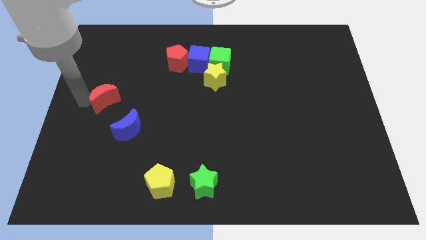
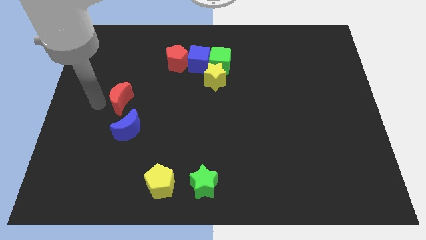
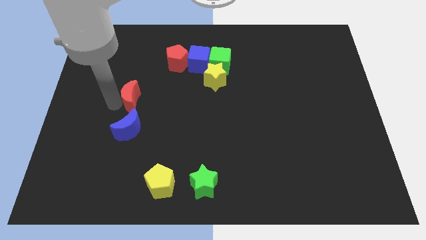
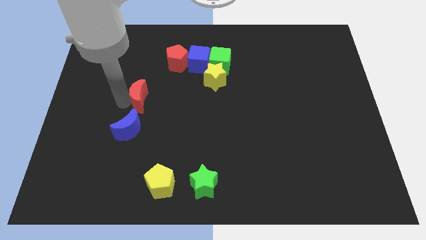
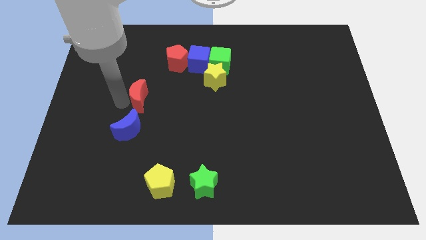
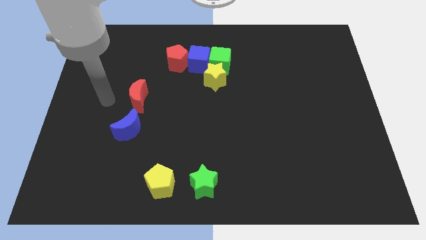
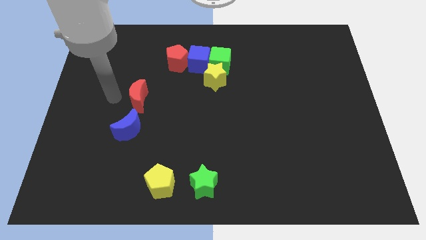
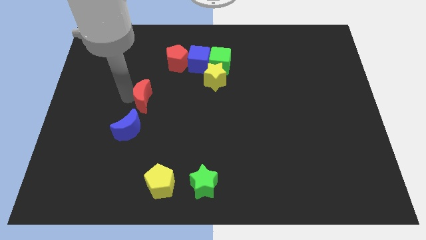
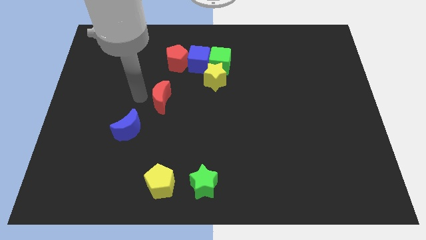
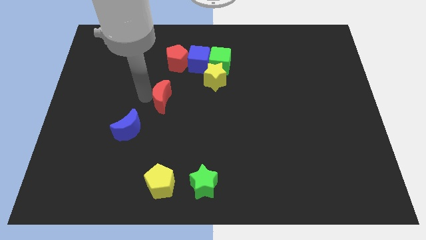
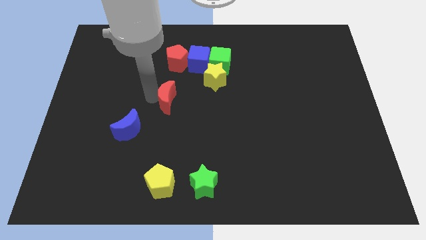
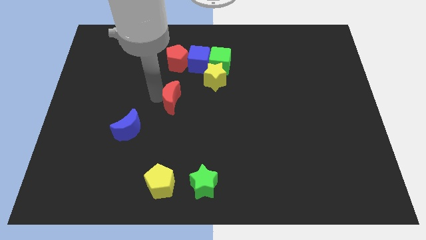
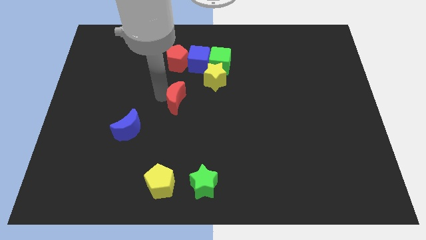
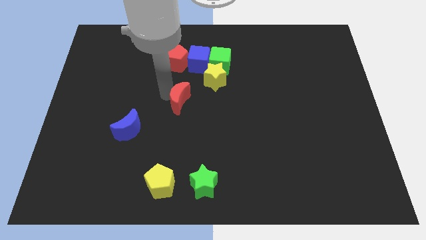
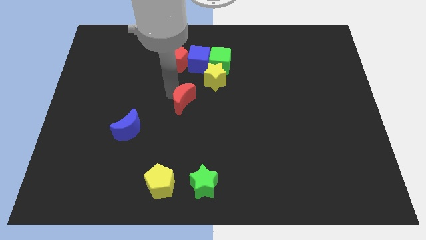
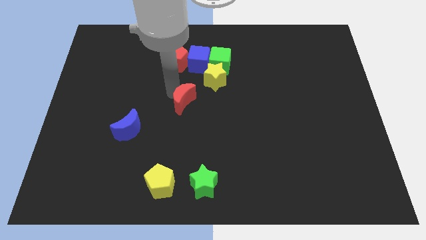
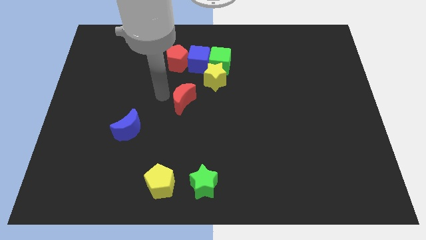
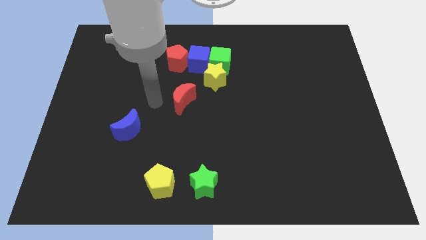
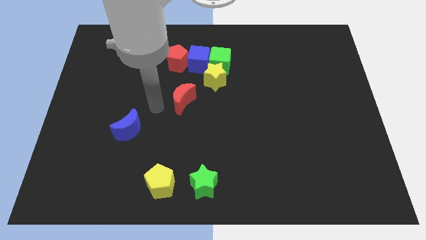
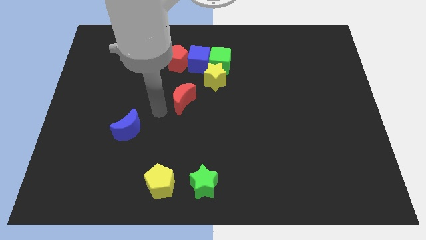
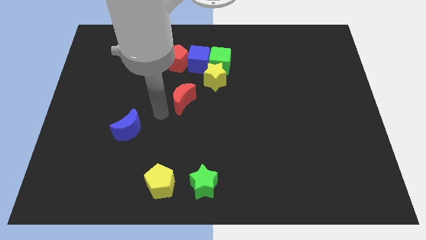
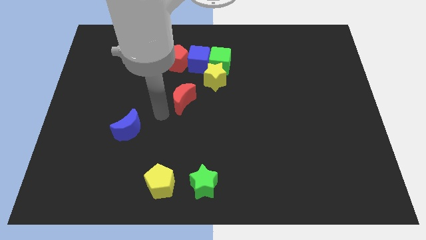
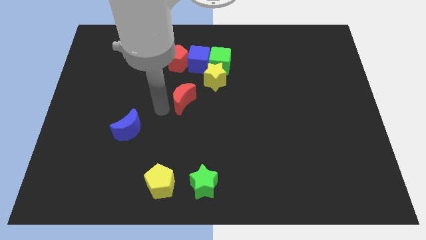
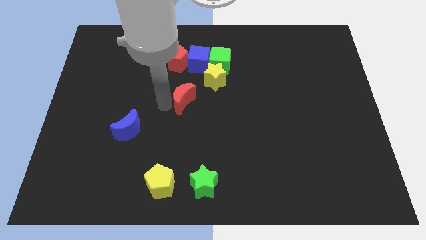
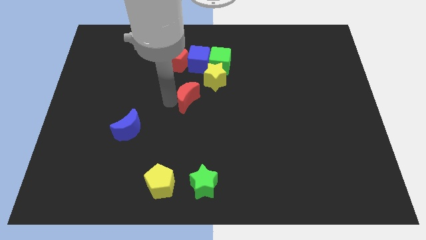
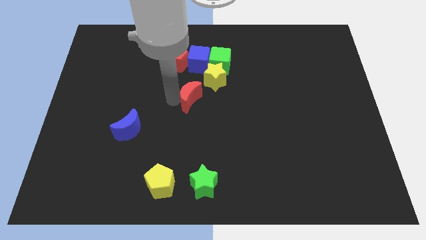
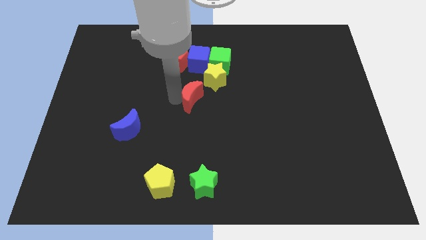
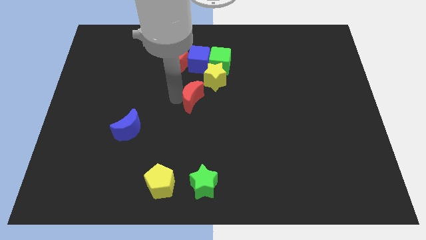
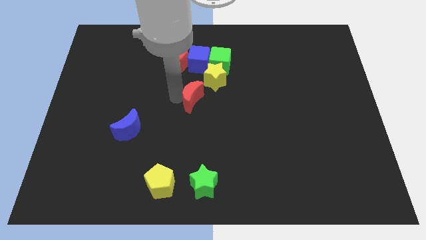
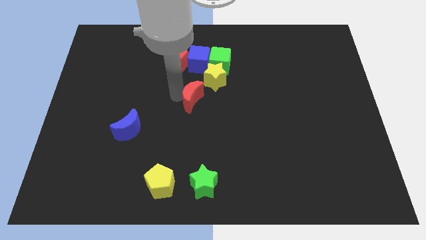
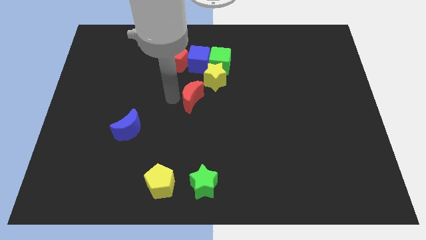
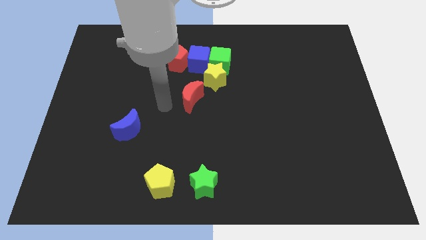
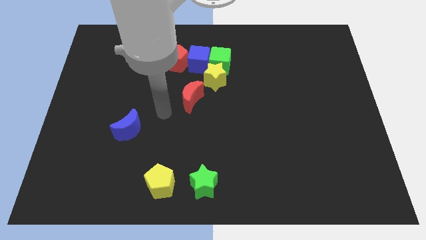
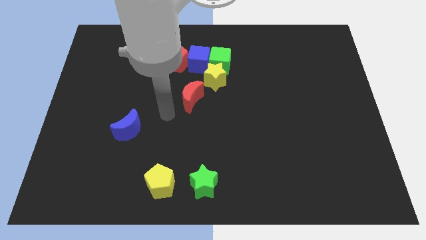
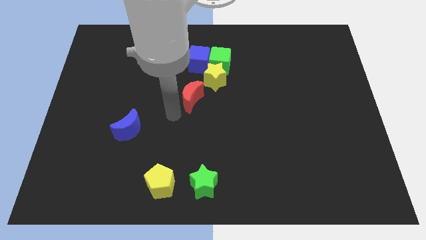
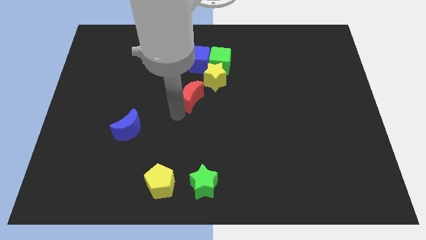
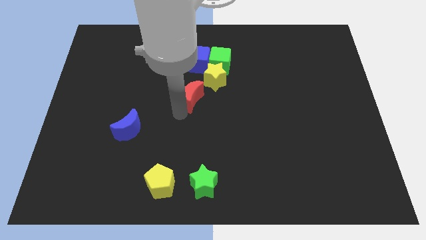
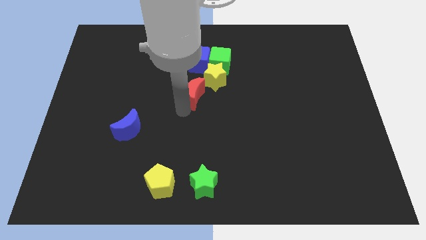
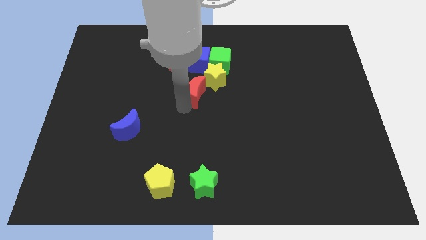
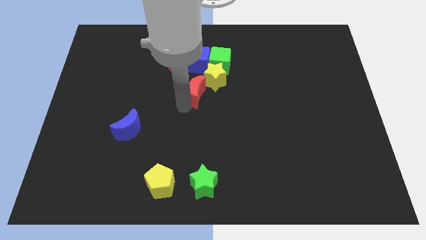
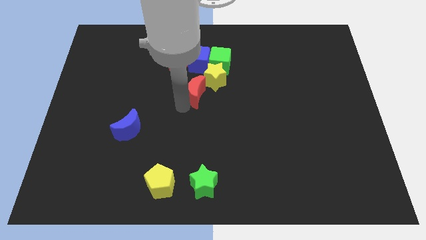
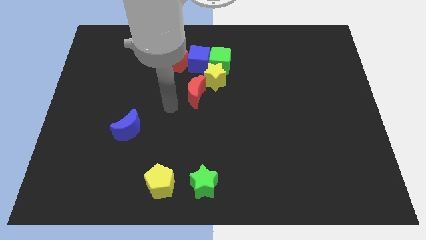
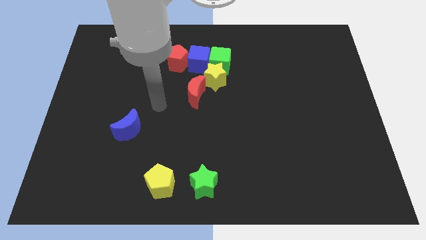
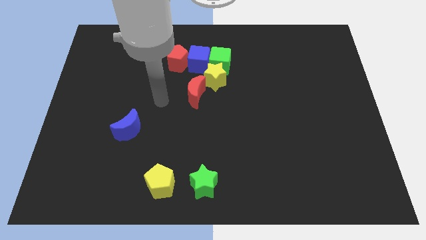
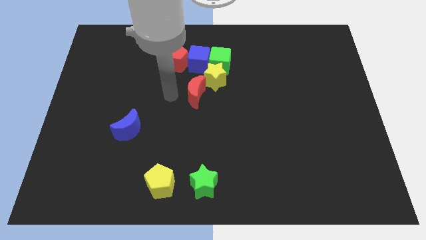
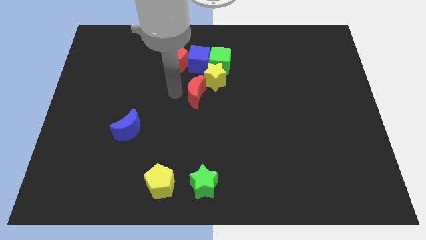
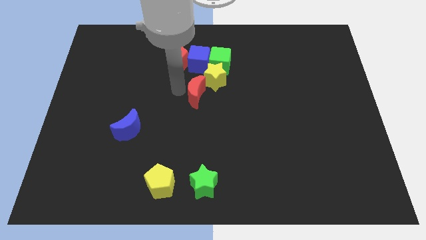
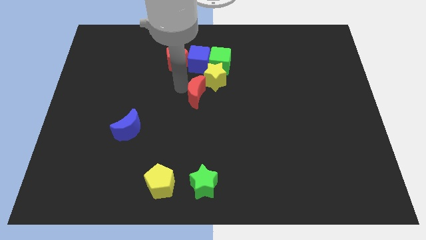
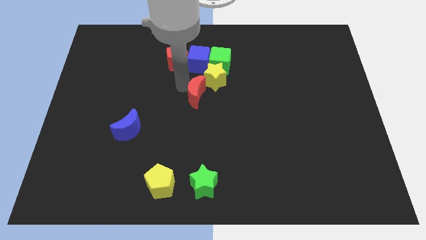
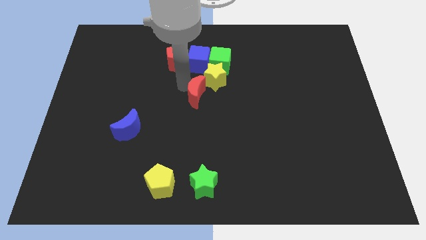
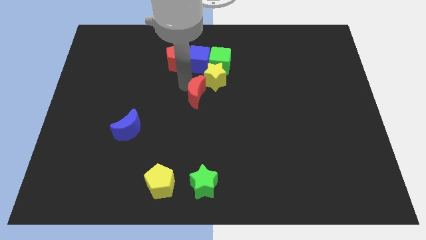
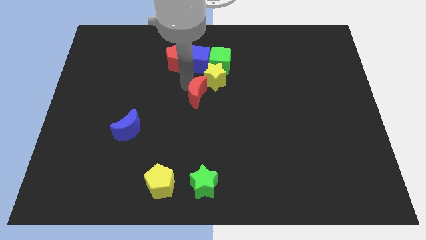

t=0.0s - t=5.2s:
place the red crescent to the bottom left of the yellow star

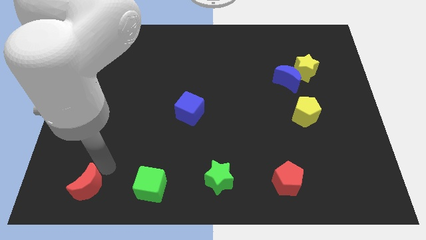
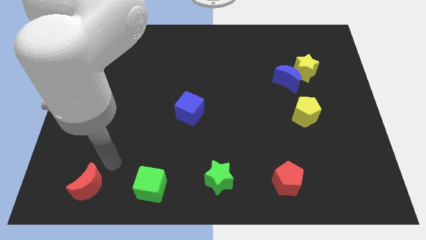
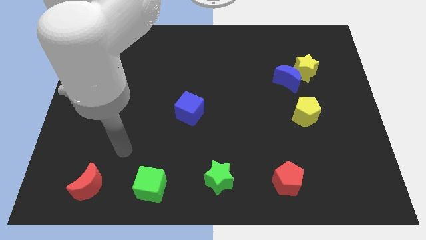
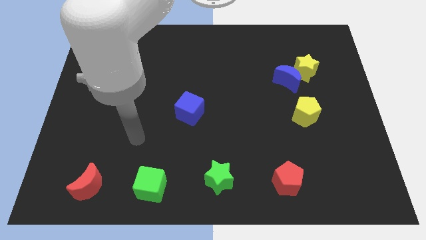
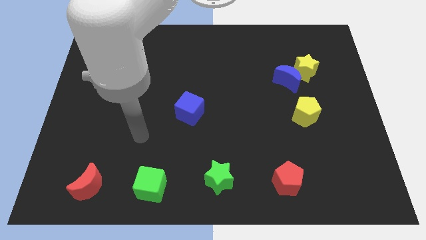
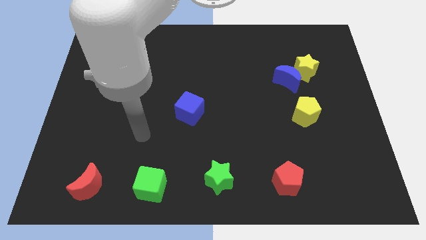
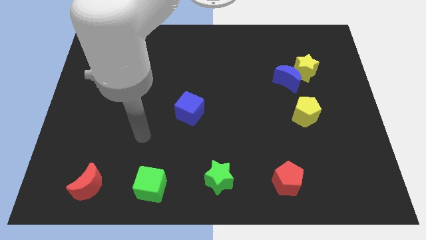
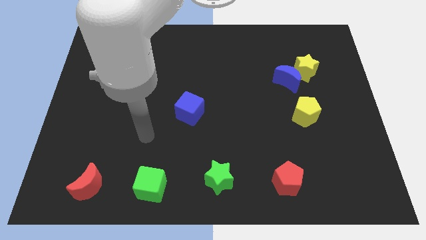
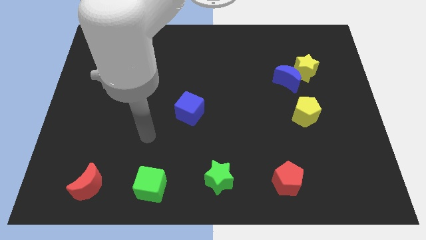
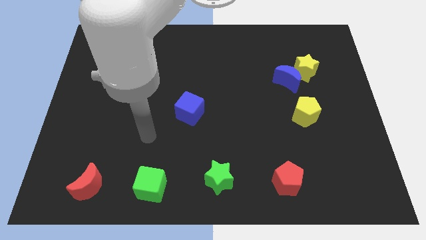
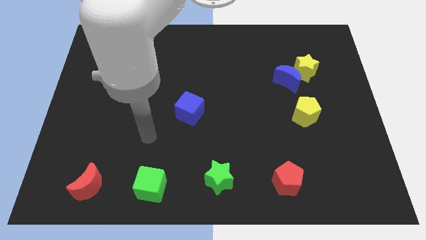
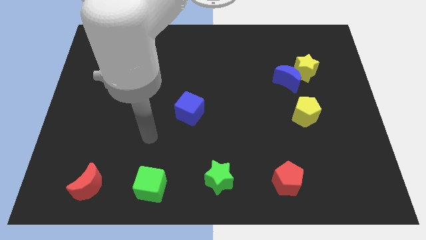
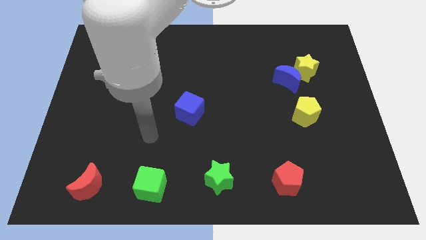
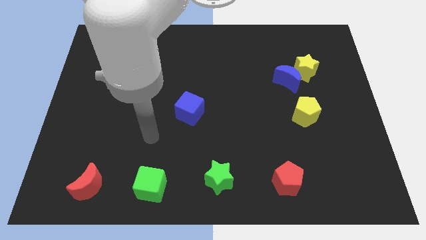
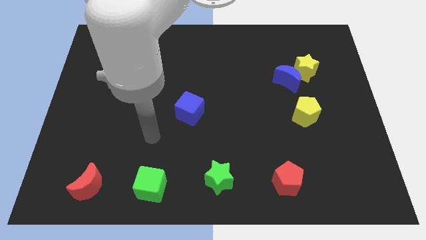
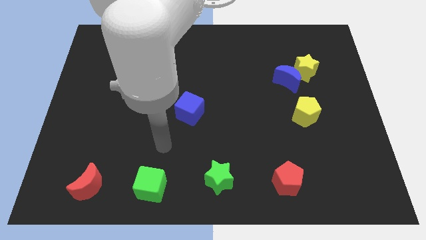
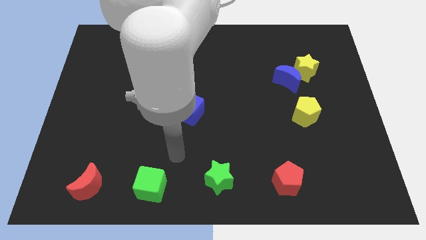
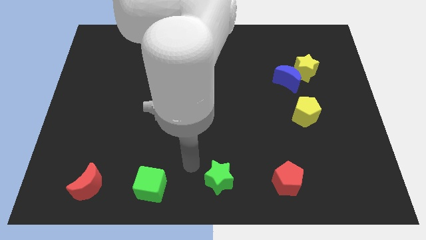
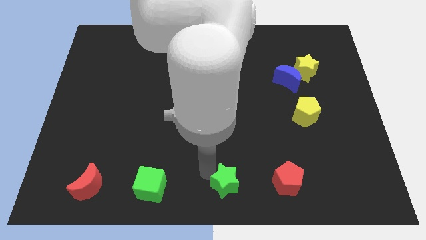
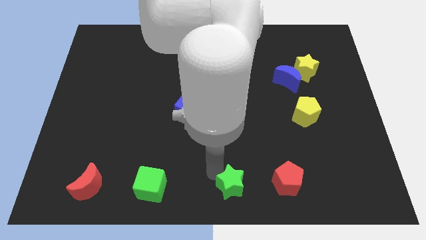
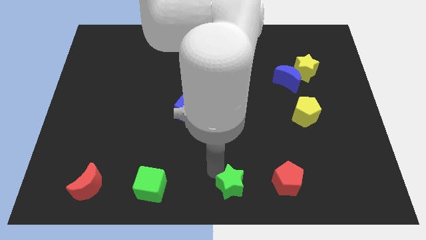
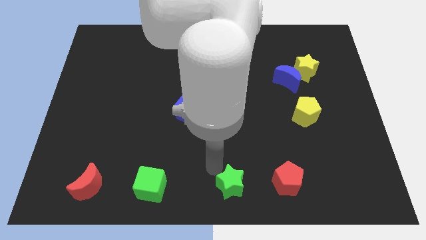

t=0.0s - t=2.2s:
push the green star slightly down

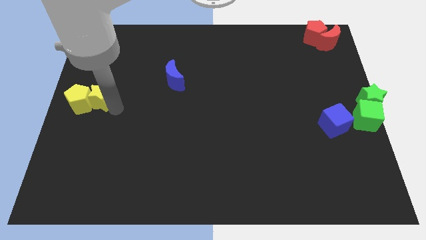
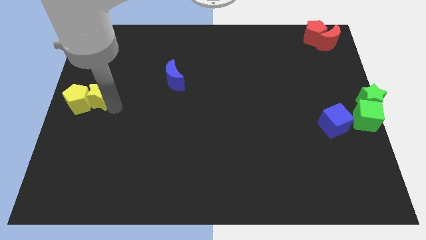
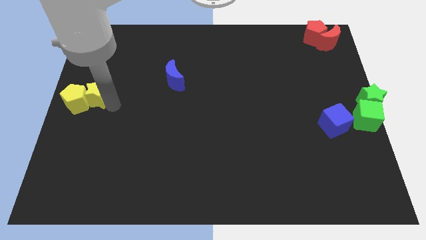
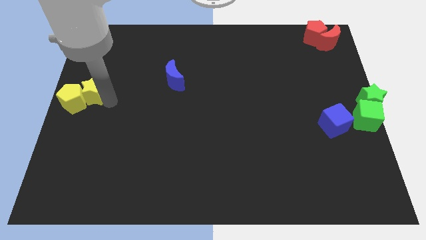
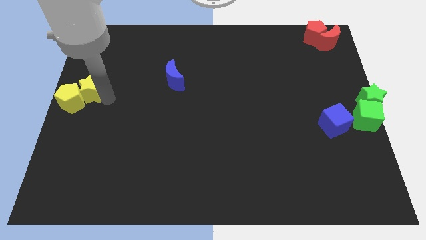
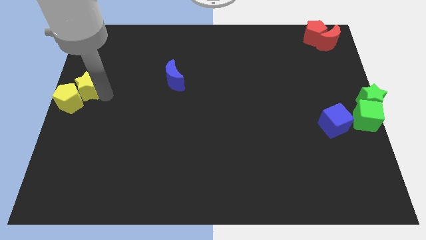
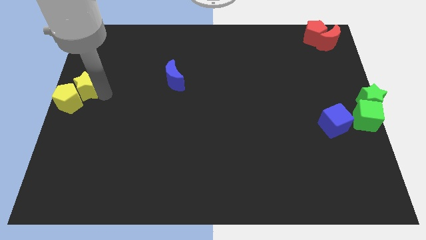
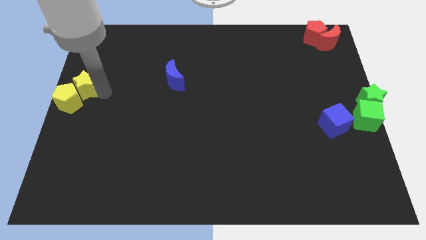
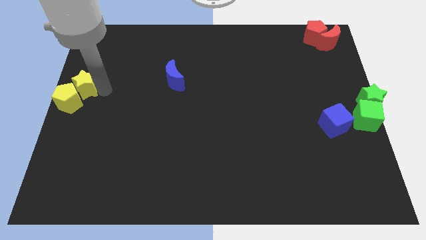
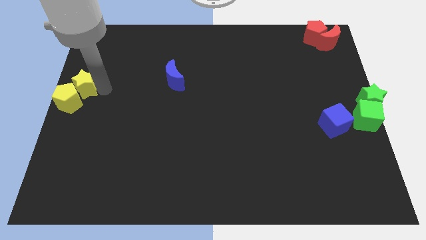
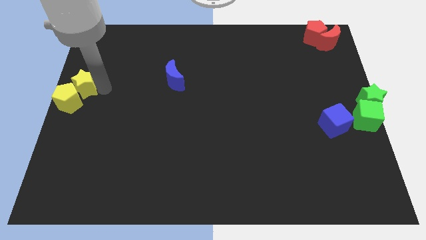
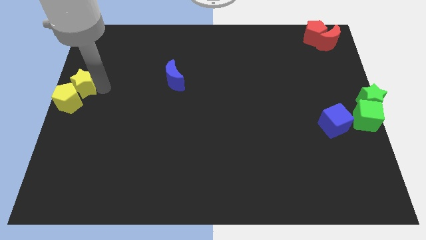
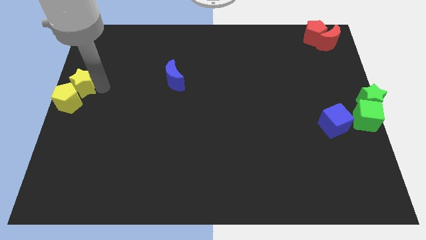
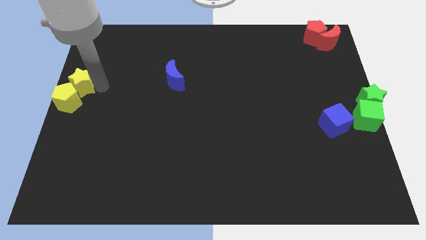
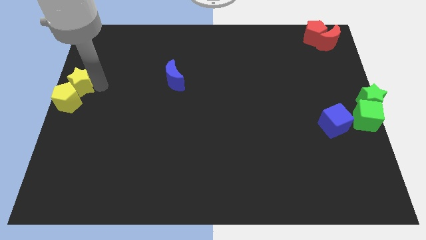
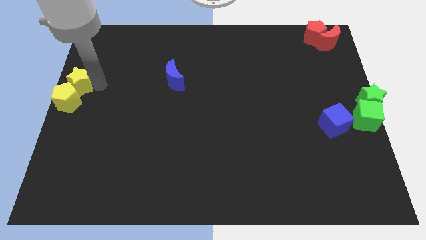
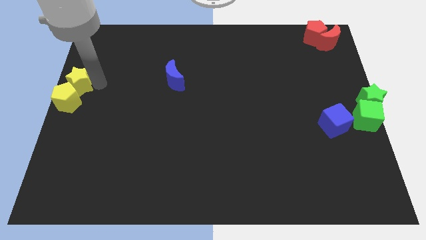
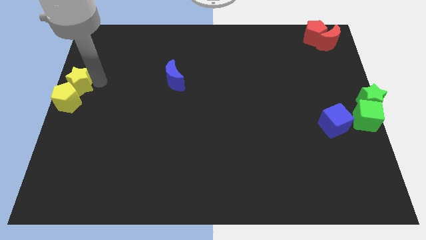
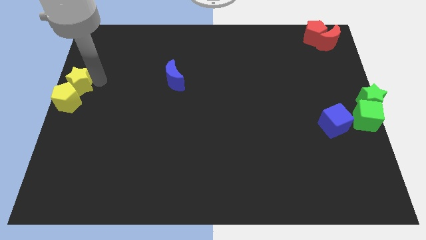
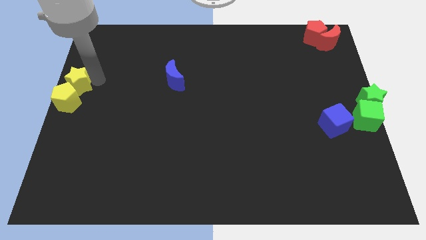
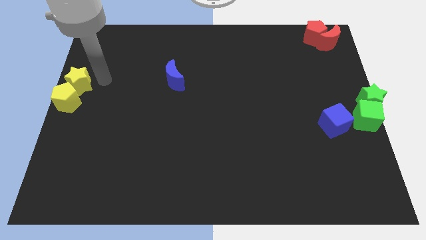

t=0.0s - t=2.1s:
place the yellow star and yellow pentagon at the left center of the board
